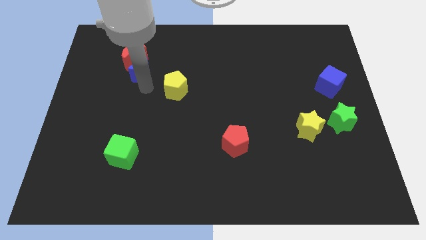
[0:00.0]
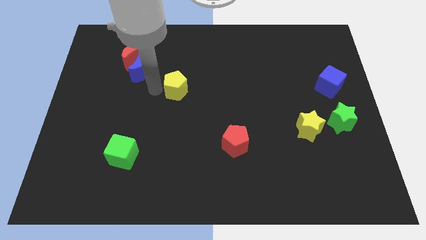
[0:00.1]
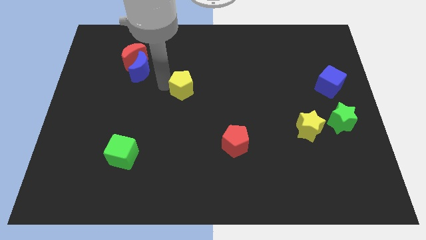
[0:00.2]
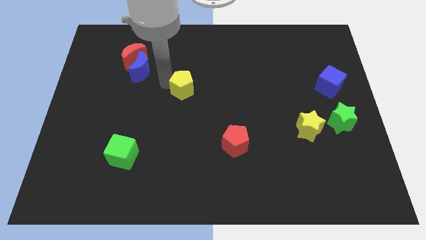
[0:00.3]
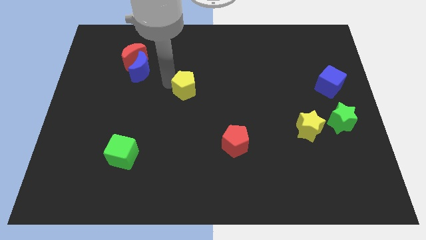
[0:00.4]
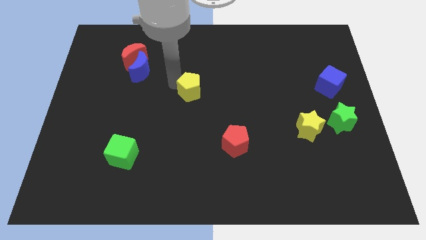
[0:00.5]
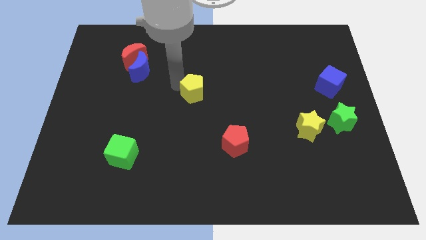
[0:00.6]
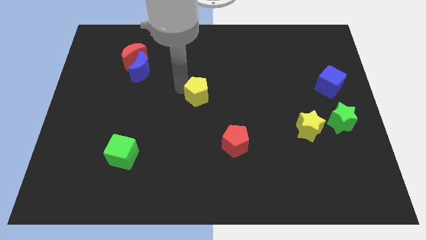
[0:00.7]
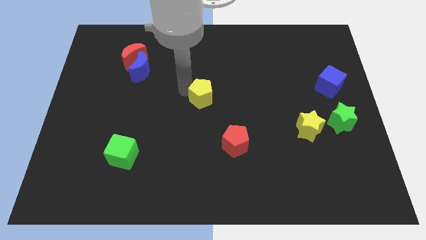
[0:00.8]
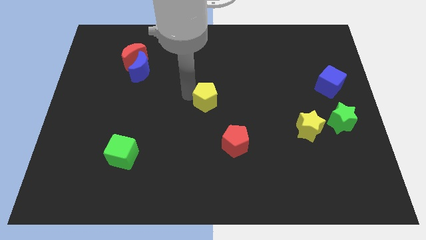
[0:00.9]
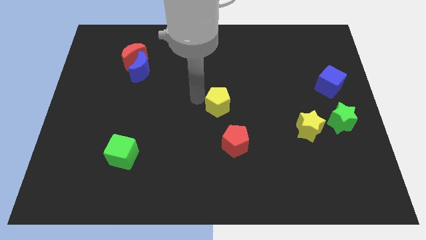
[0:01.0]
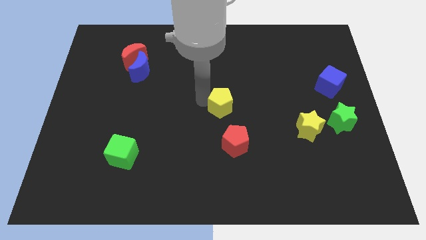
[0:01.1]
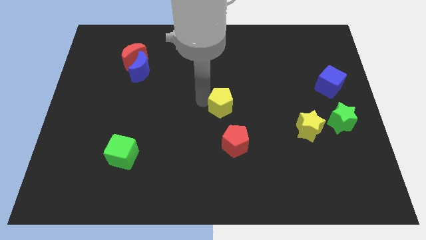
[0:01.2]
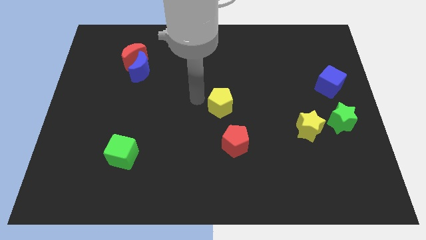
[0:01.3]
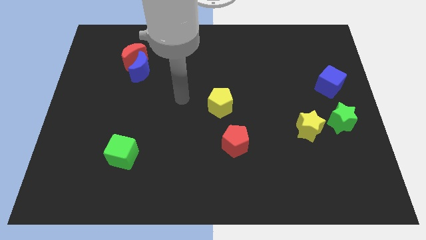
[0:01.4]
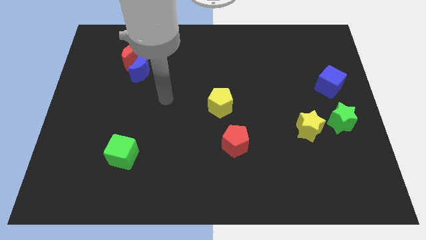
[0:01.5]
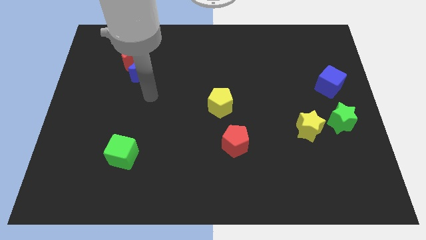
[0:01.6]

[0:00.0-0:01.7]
move the yellow pentagon to the top side of the red pentagon

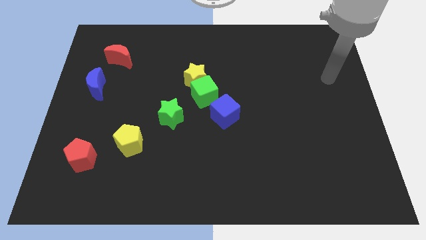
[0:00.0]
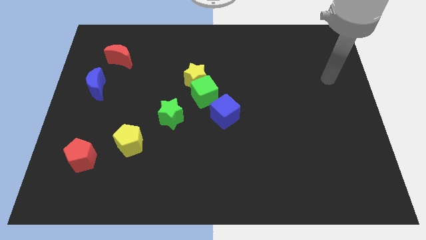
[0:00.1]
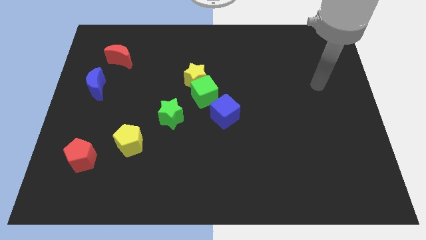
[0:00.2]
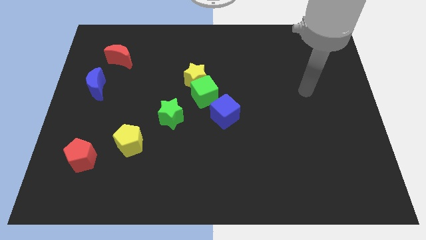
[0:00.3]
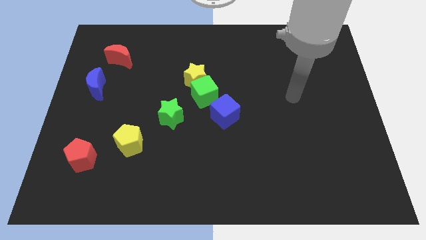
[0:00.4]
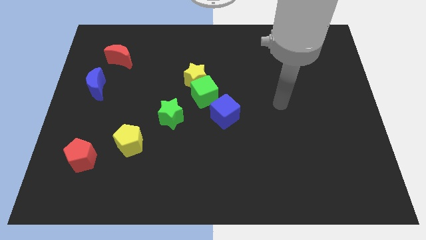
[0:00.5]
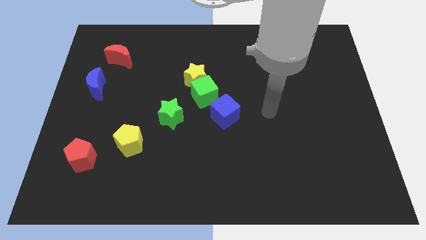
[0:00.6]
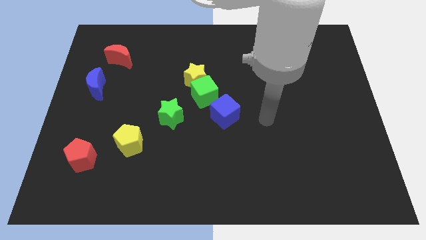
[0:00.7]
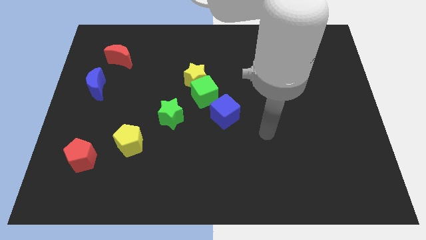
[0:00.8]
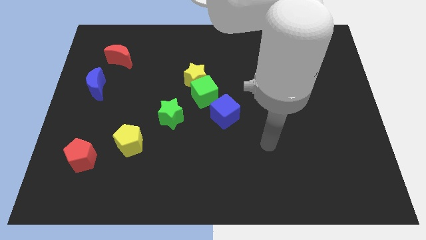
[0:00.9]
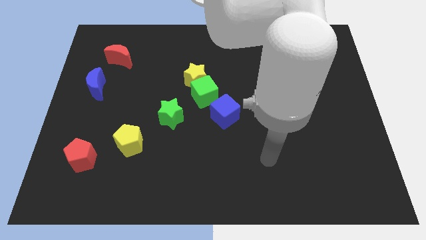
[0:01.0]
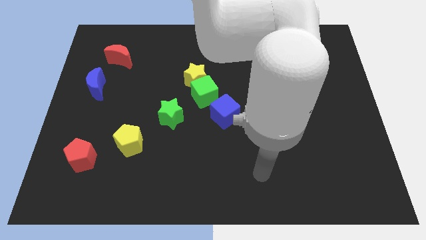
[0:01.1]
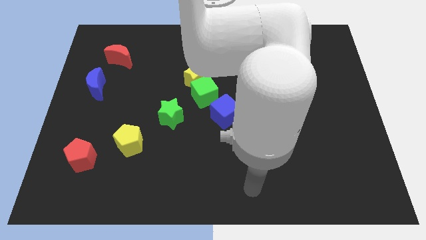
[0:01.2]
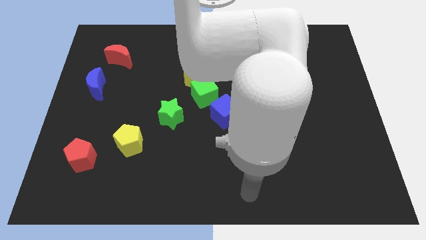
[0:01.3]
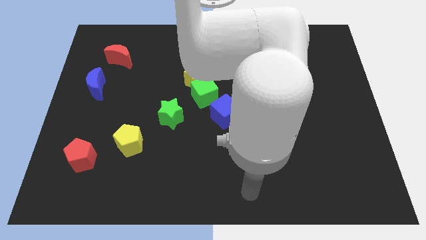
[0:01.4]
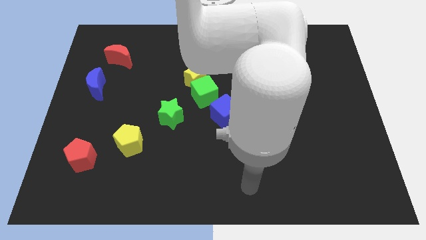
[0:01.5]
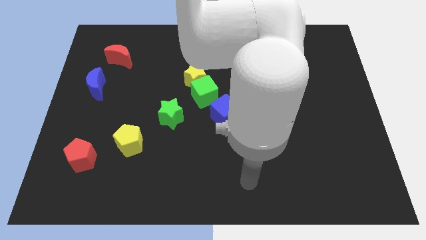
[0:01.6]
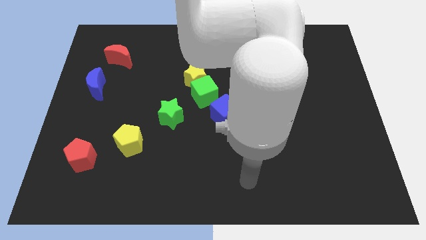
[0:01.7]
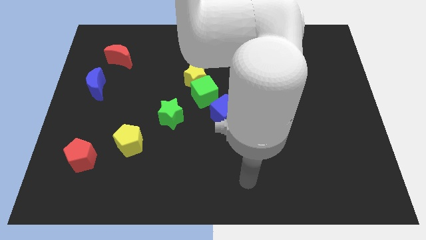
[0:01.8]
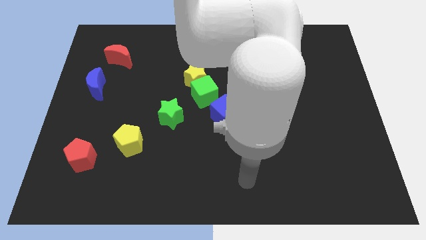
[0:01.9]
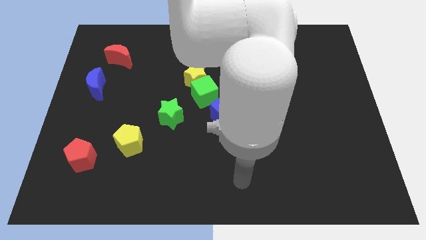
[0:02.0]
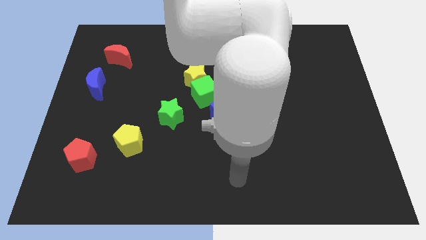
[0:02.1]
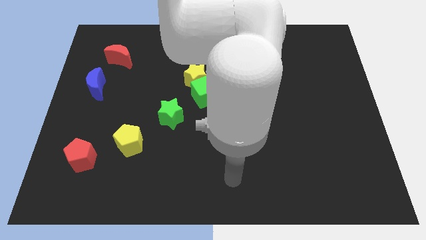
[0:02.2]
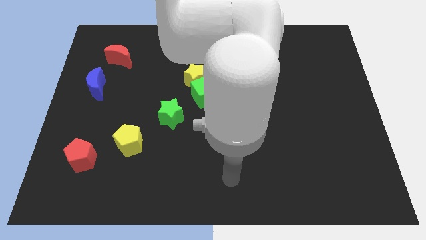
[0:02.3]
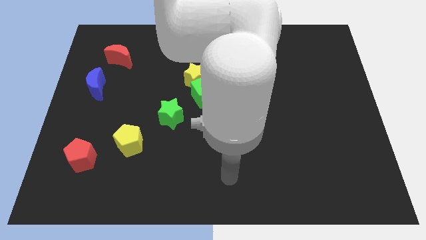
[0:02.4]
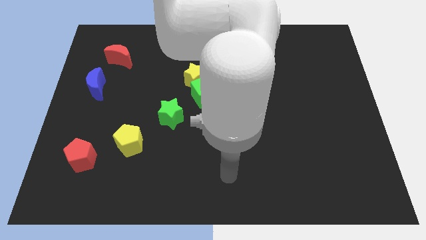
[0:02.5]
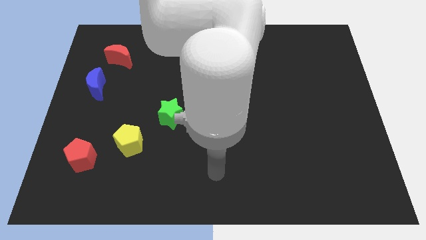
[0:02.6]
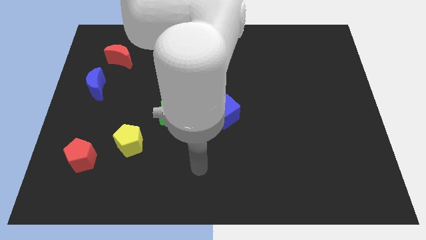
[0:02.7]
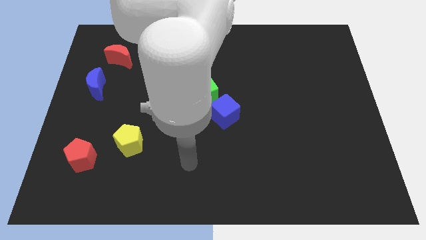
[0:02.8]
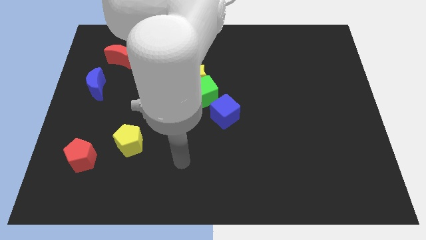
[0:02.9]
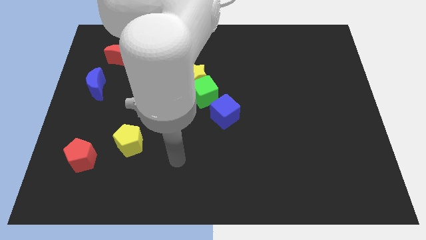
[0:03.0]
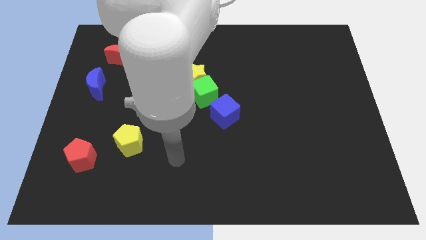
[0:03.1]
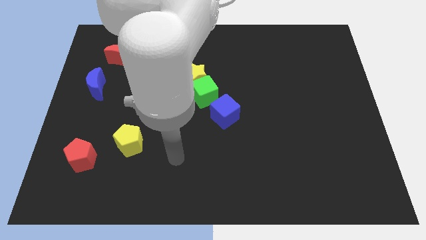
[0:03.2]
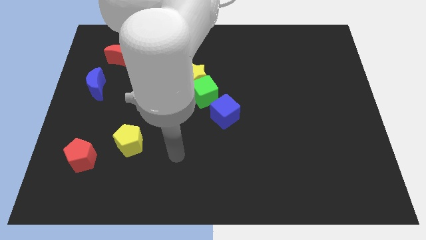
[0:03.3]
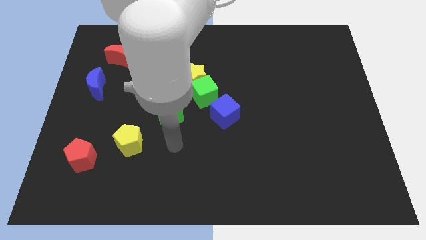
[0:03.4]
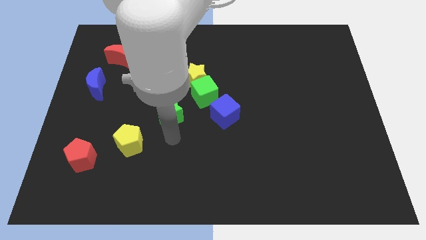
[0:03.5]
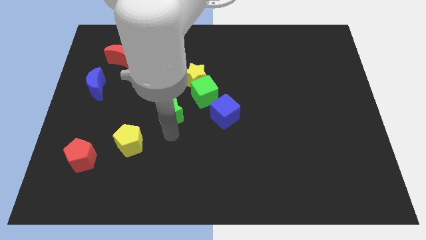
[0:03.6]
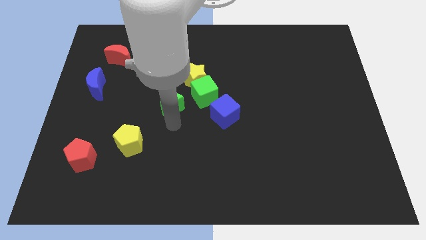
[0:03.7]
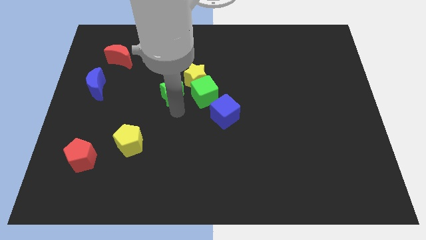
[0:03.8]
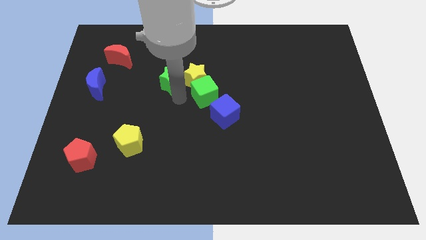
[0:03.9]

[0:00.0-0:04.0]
put the green star left to the yellow star

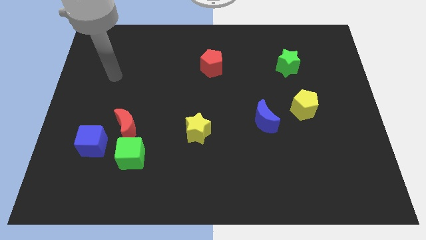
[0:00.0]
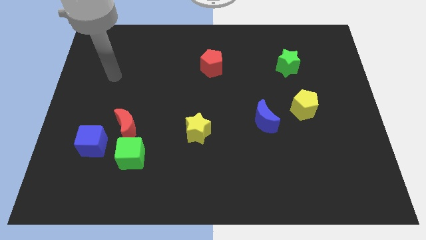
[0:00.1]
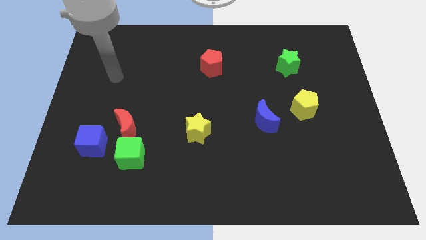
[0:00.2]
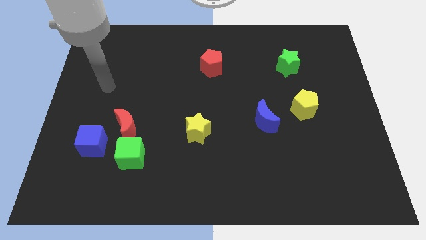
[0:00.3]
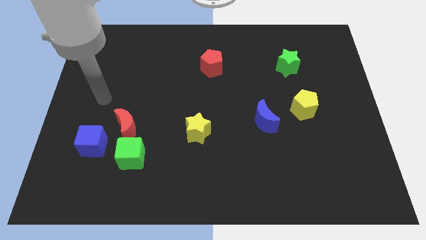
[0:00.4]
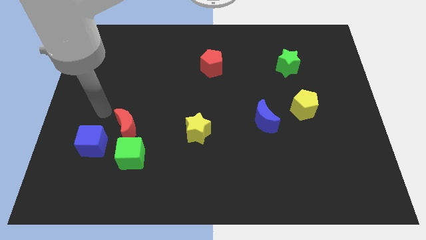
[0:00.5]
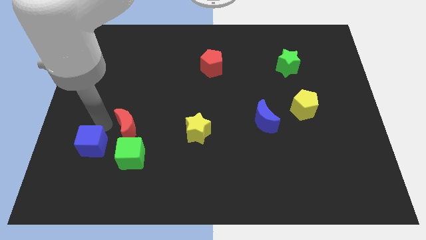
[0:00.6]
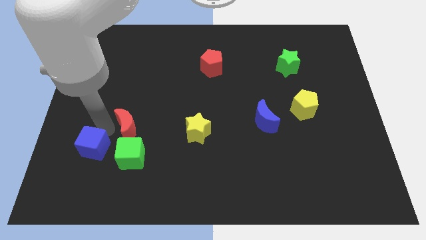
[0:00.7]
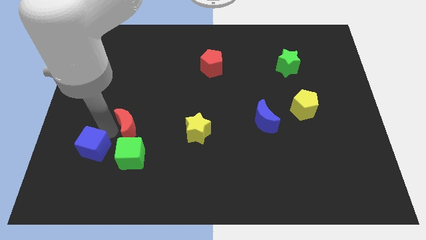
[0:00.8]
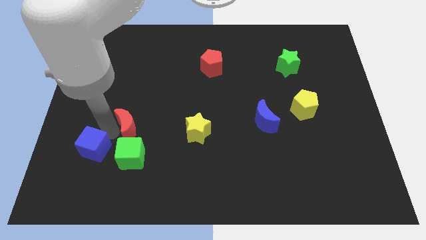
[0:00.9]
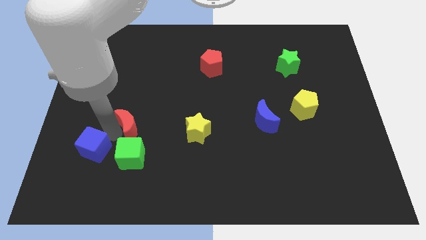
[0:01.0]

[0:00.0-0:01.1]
put your hand in between the red moon and blue cube

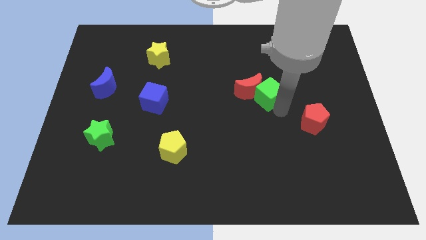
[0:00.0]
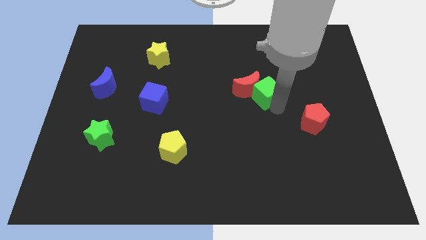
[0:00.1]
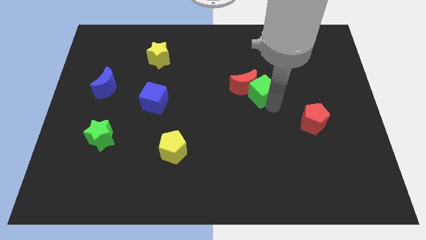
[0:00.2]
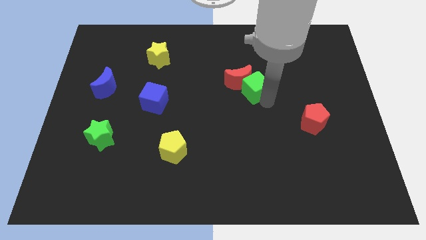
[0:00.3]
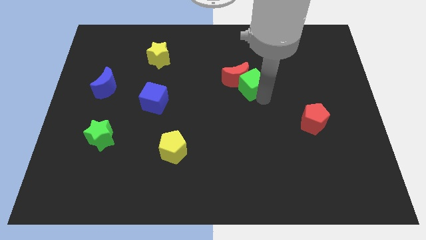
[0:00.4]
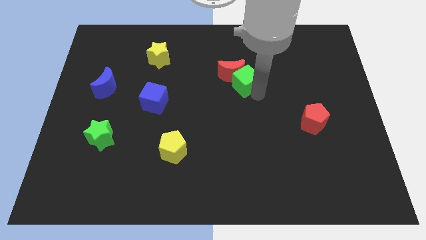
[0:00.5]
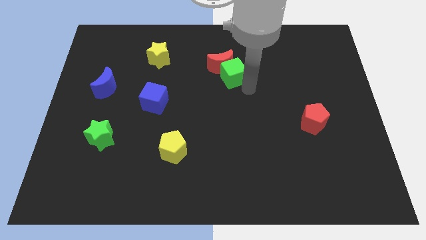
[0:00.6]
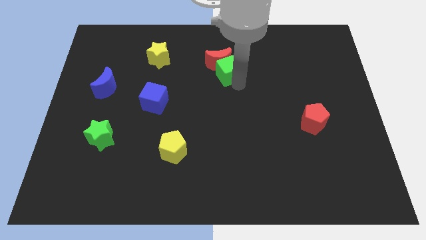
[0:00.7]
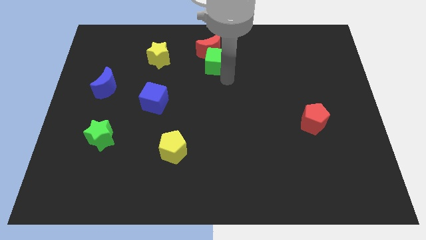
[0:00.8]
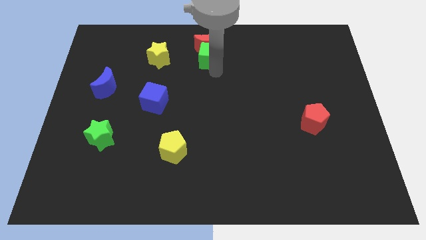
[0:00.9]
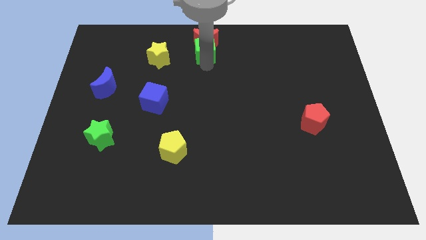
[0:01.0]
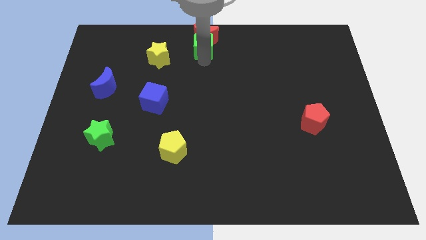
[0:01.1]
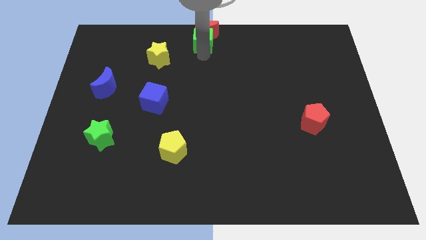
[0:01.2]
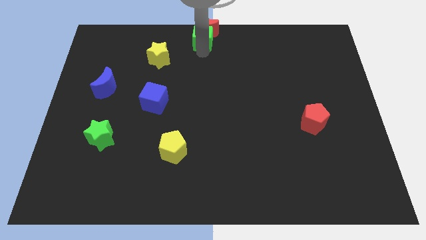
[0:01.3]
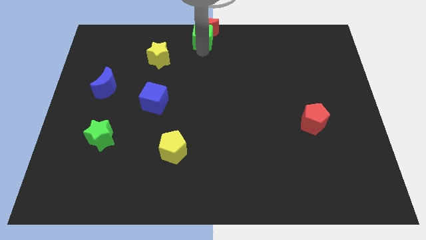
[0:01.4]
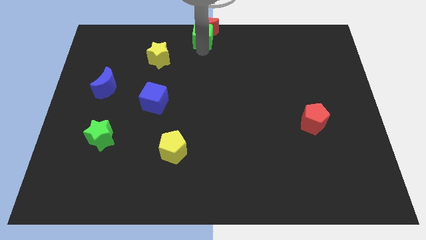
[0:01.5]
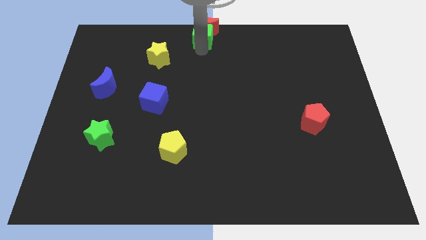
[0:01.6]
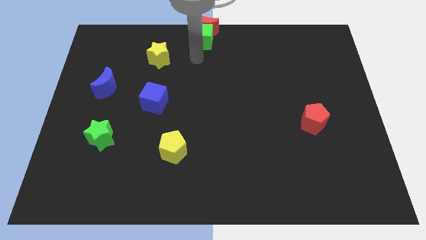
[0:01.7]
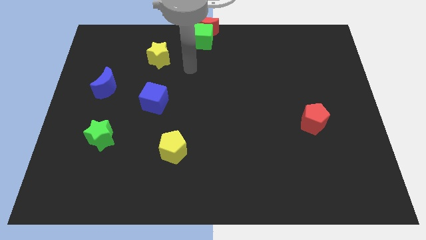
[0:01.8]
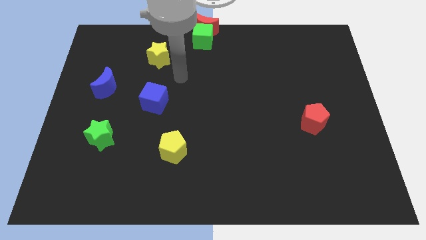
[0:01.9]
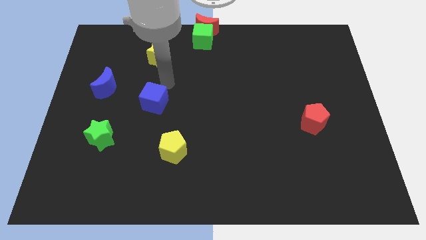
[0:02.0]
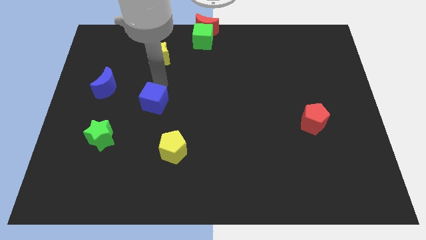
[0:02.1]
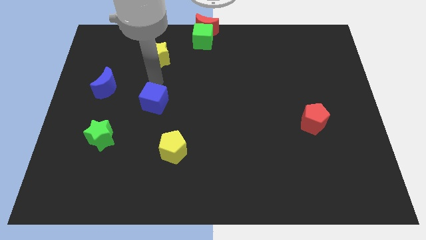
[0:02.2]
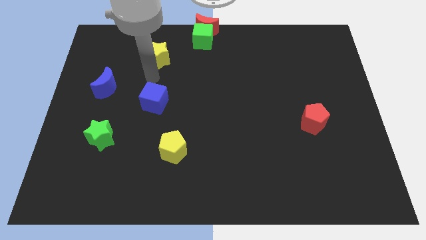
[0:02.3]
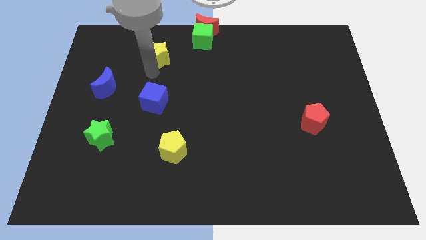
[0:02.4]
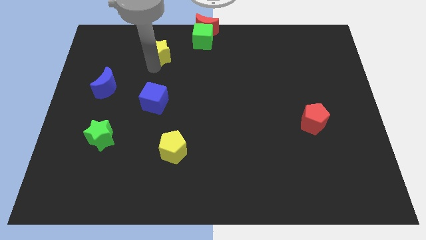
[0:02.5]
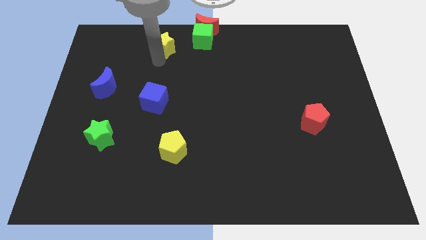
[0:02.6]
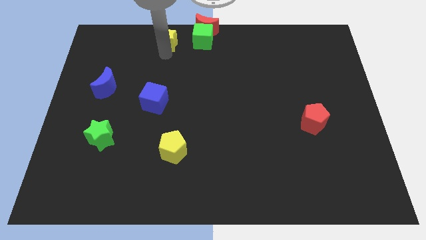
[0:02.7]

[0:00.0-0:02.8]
move green cube into red crescent towards the top center of the board
